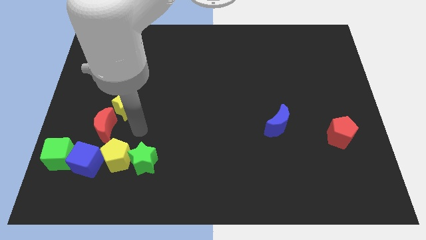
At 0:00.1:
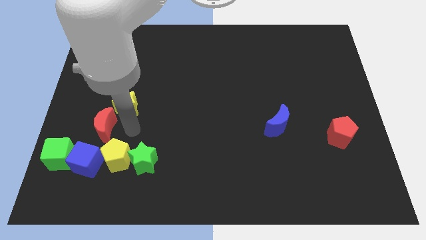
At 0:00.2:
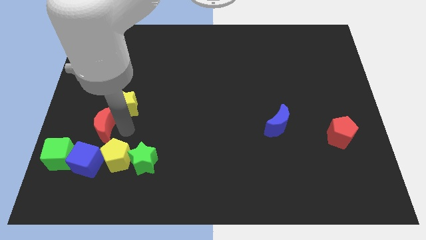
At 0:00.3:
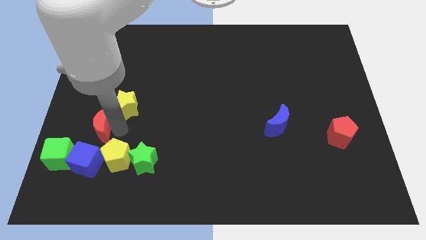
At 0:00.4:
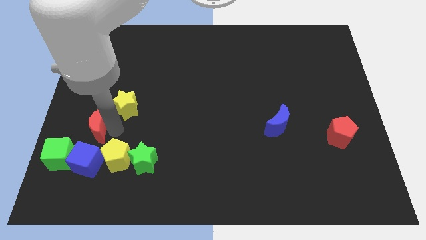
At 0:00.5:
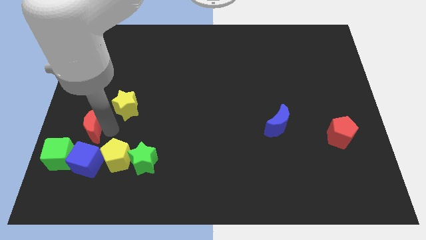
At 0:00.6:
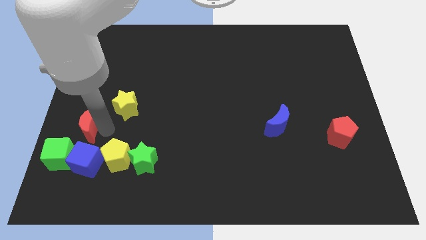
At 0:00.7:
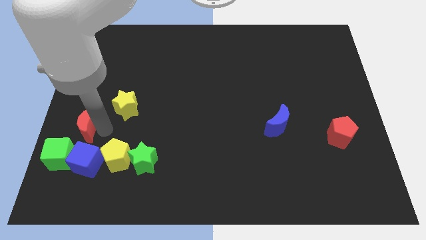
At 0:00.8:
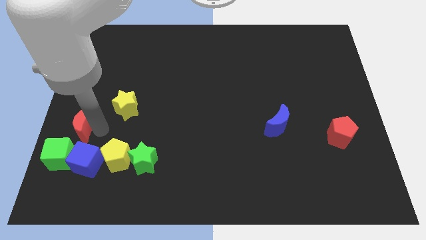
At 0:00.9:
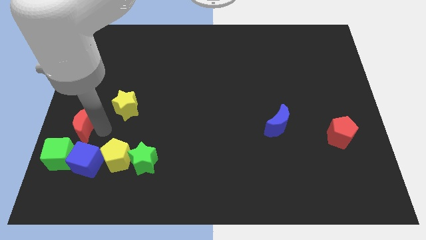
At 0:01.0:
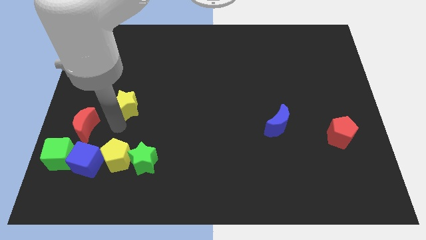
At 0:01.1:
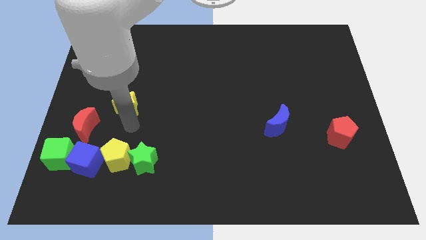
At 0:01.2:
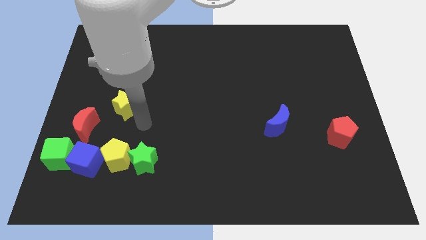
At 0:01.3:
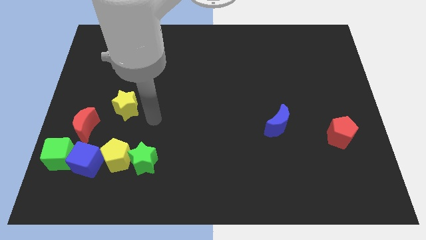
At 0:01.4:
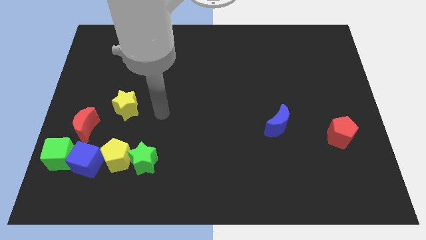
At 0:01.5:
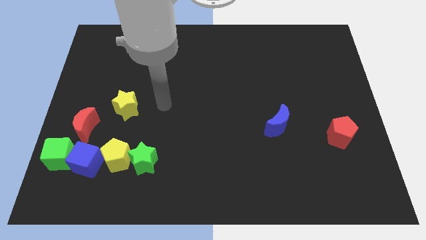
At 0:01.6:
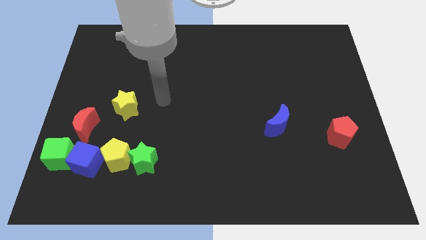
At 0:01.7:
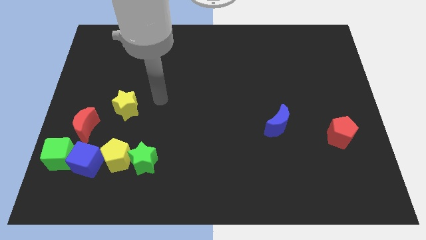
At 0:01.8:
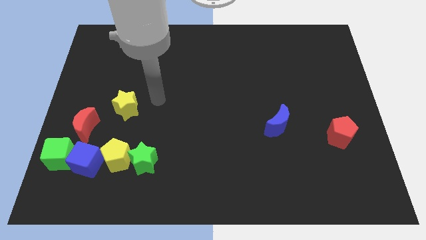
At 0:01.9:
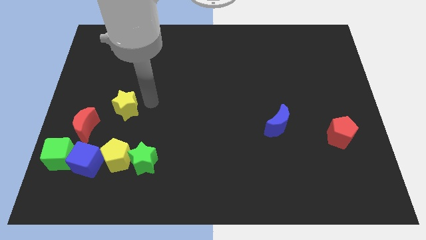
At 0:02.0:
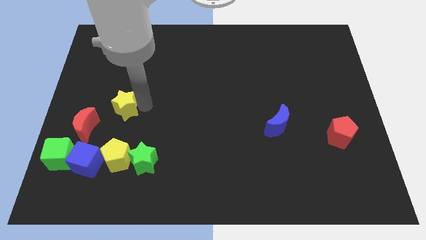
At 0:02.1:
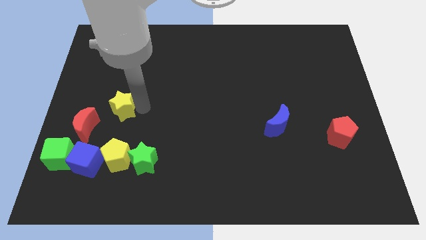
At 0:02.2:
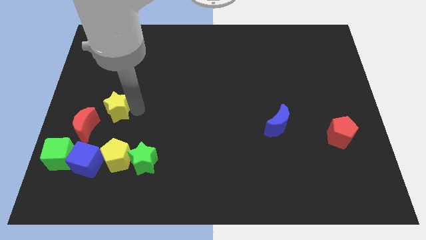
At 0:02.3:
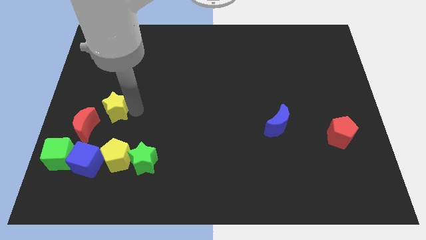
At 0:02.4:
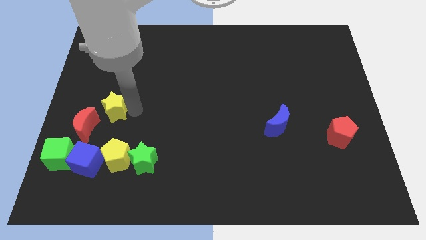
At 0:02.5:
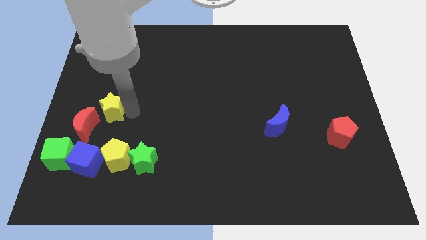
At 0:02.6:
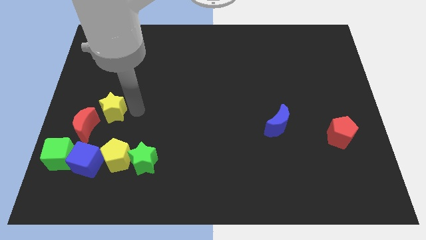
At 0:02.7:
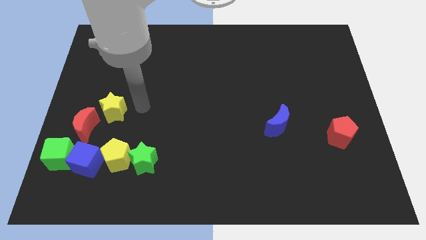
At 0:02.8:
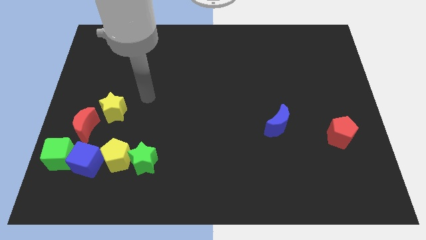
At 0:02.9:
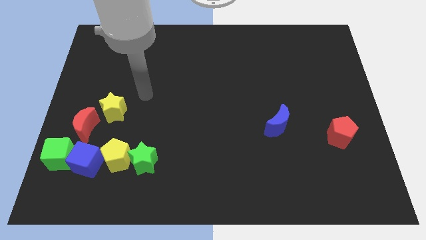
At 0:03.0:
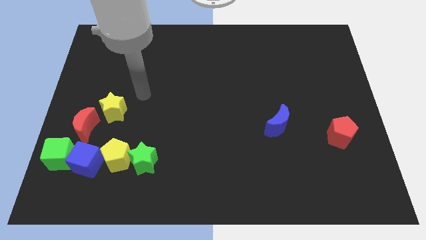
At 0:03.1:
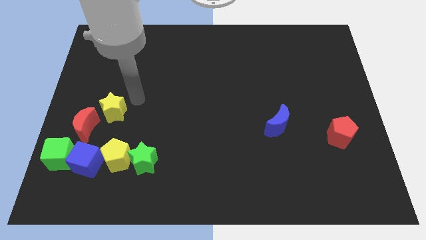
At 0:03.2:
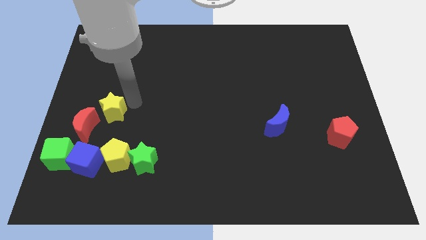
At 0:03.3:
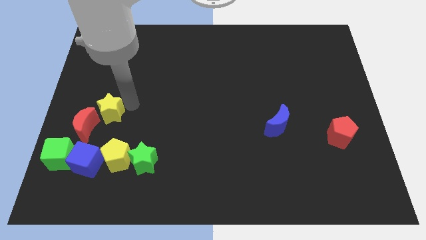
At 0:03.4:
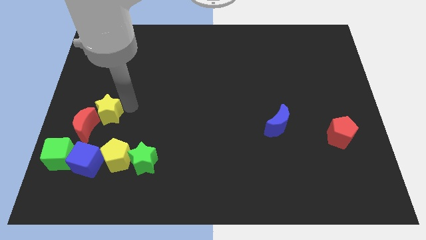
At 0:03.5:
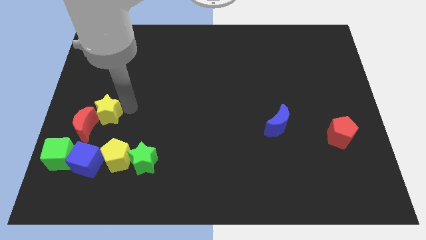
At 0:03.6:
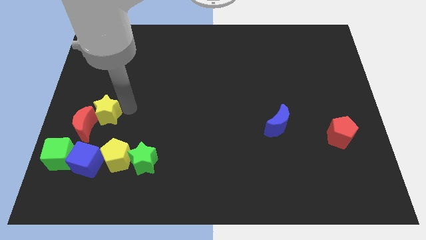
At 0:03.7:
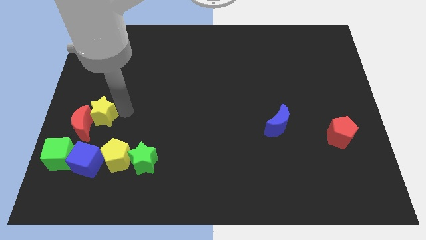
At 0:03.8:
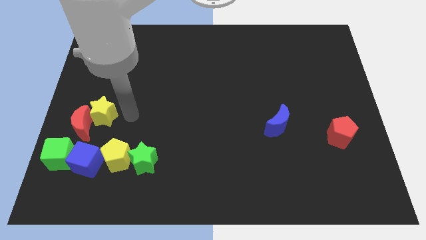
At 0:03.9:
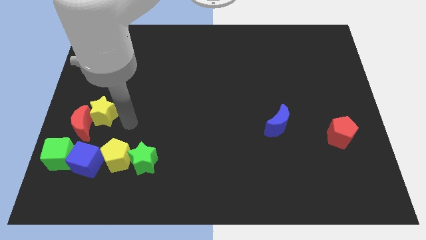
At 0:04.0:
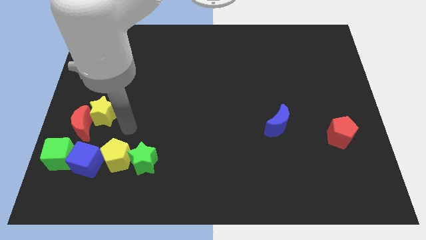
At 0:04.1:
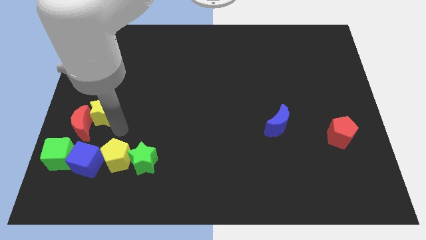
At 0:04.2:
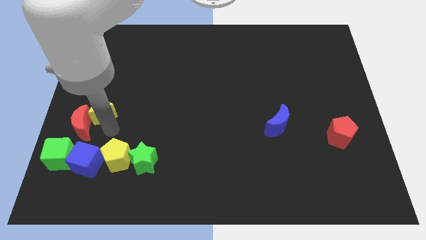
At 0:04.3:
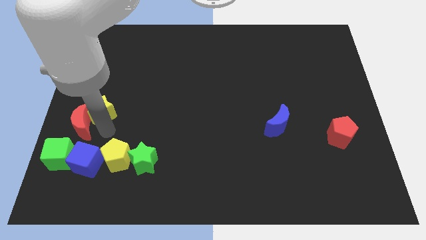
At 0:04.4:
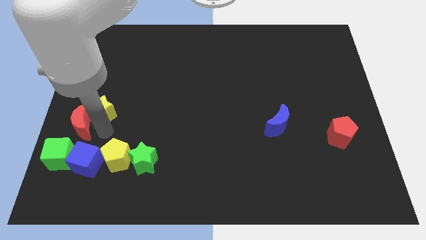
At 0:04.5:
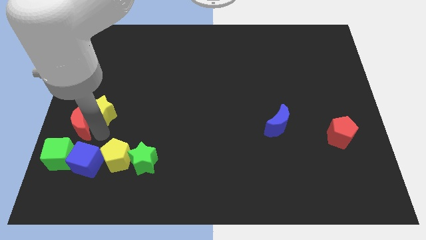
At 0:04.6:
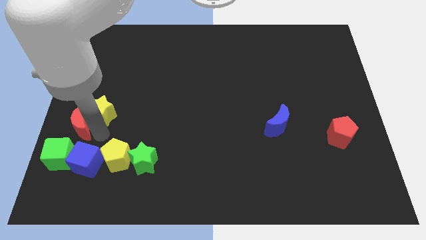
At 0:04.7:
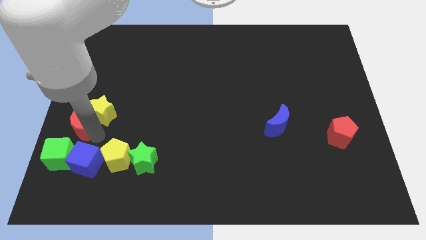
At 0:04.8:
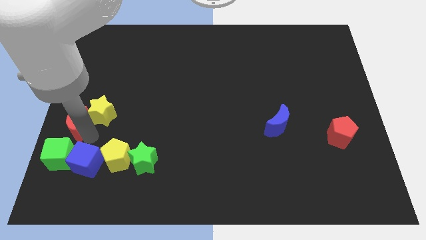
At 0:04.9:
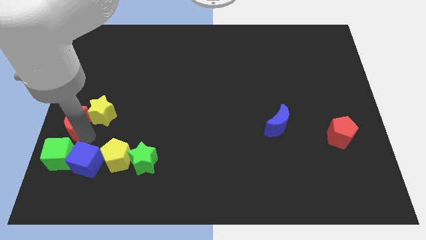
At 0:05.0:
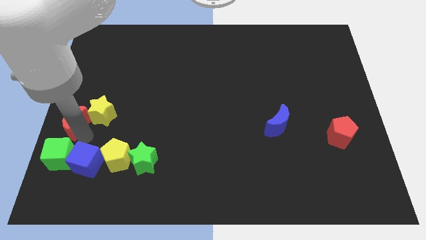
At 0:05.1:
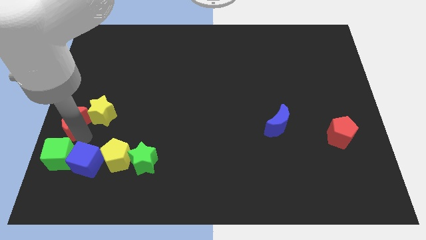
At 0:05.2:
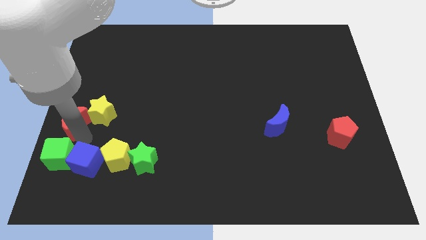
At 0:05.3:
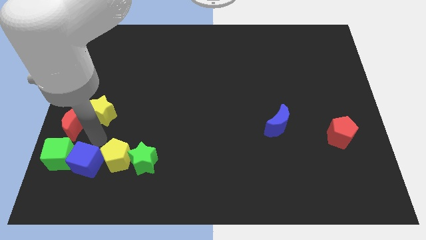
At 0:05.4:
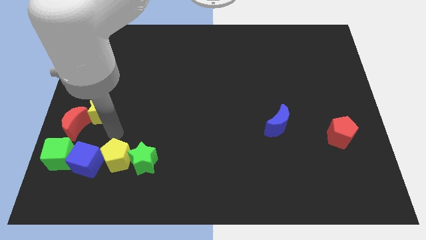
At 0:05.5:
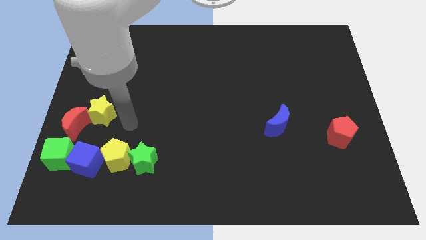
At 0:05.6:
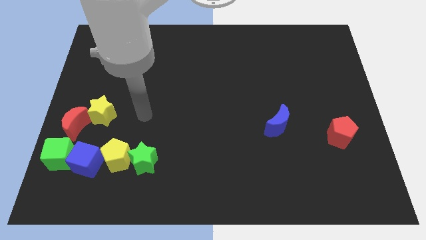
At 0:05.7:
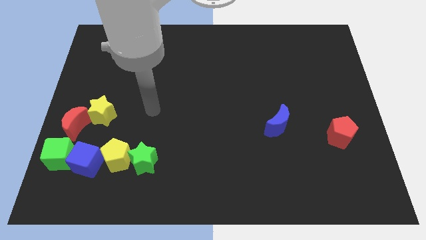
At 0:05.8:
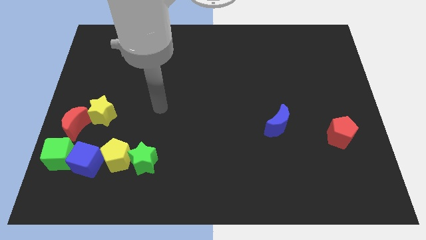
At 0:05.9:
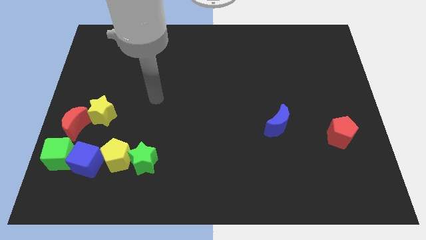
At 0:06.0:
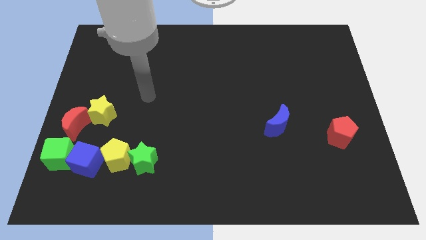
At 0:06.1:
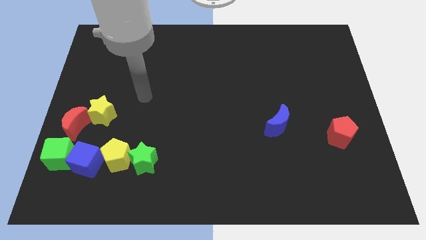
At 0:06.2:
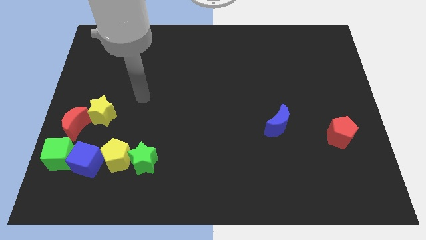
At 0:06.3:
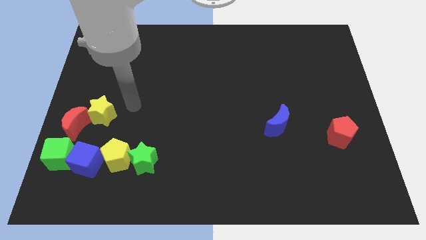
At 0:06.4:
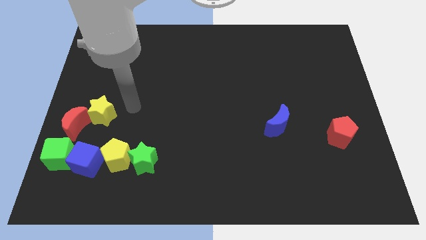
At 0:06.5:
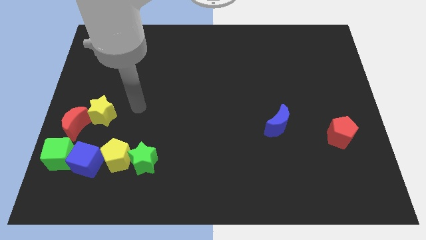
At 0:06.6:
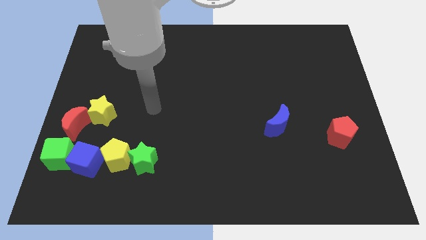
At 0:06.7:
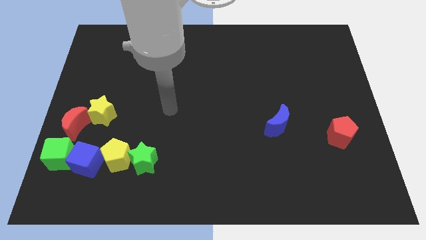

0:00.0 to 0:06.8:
place the red crescent above the green cube

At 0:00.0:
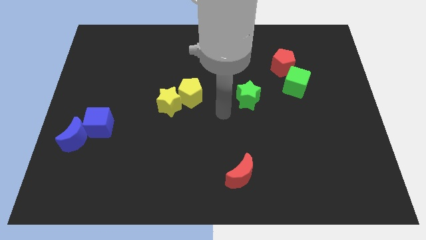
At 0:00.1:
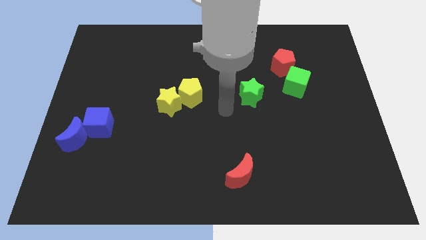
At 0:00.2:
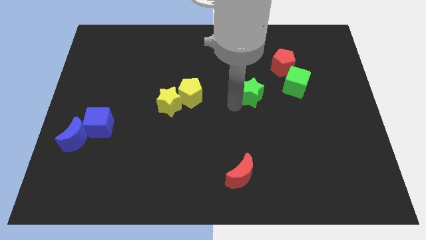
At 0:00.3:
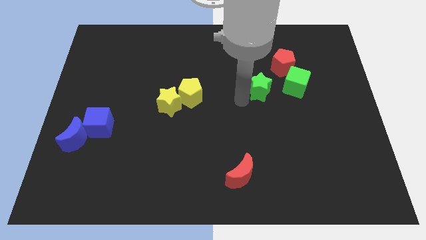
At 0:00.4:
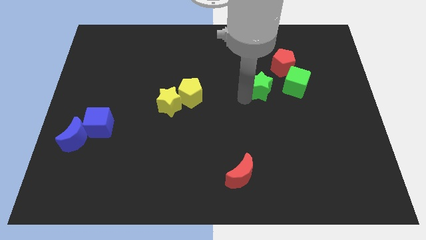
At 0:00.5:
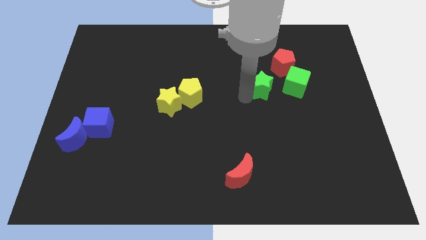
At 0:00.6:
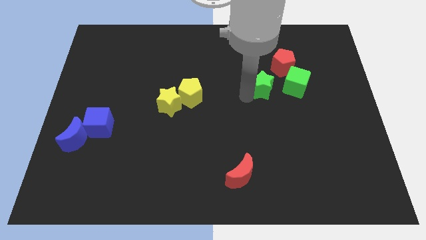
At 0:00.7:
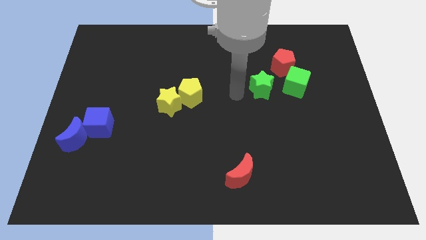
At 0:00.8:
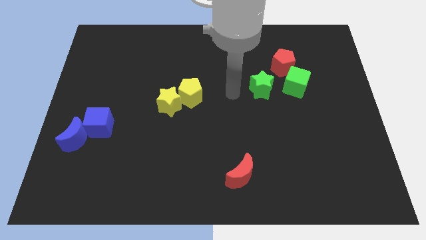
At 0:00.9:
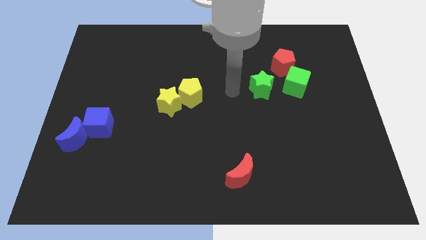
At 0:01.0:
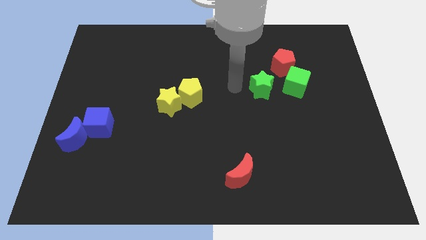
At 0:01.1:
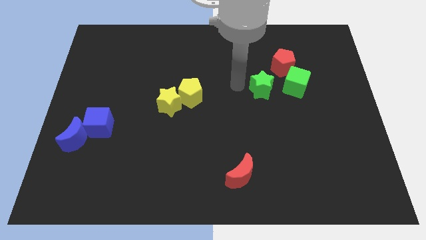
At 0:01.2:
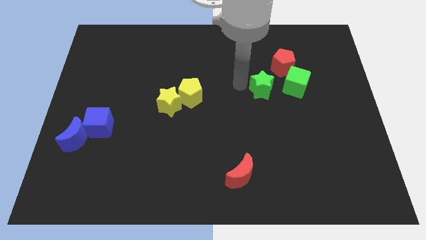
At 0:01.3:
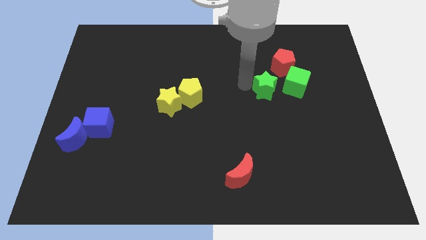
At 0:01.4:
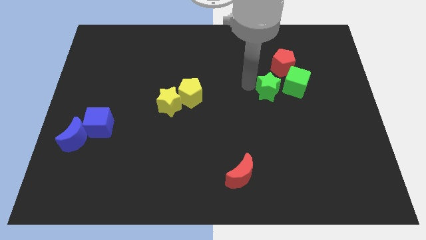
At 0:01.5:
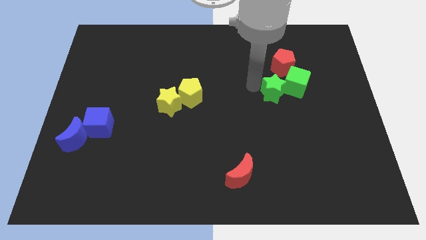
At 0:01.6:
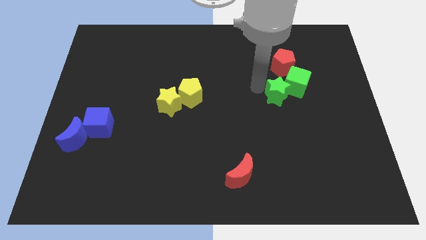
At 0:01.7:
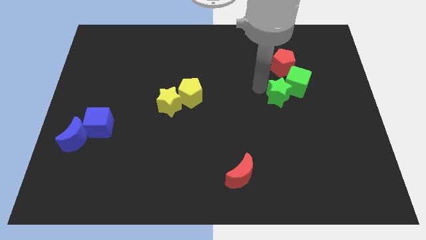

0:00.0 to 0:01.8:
push the green star into green cube

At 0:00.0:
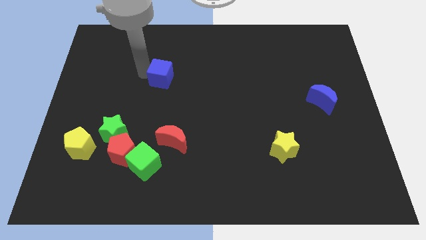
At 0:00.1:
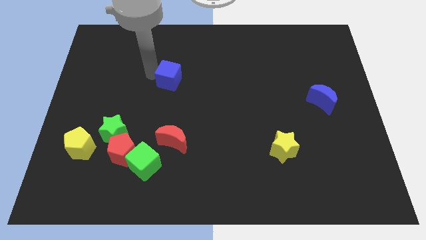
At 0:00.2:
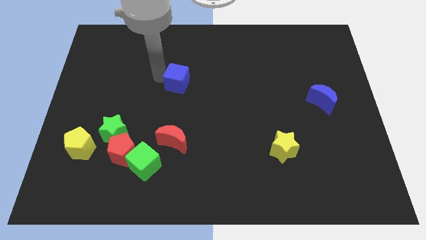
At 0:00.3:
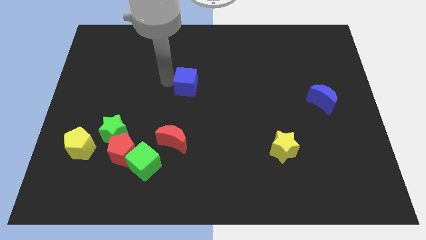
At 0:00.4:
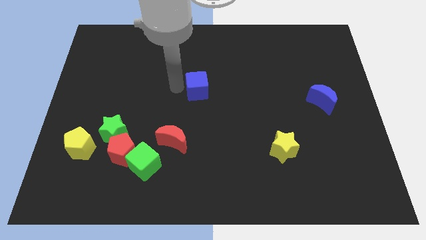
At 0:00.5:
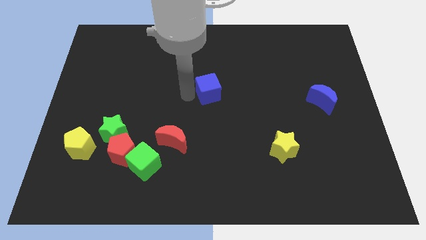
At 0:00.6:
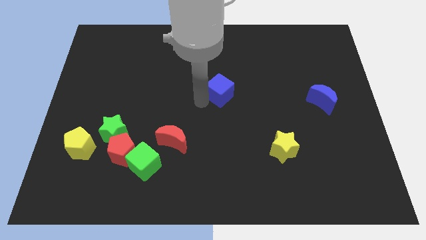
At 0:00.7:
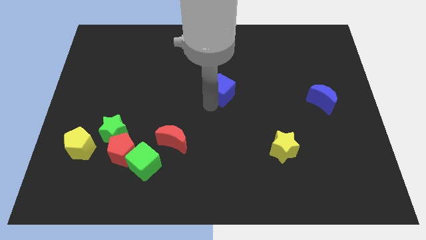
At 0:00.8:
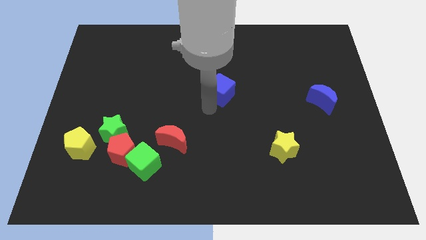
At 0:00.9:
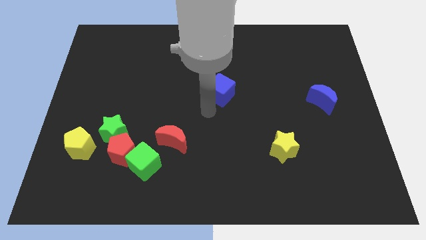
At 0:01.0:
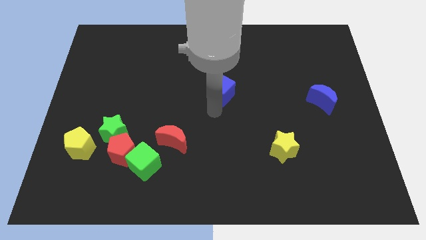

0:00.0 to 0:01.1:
place blue cube at center
